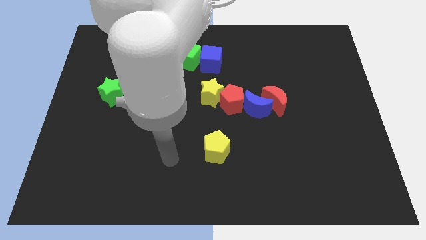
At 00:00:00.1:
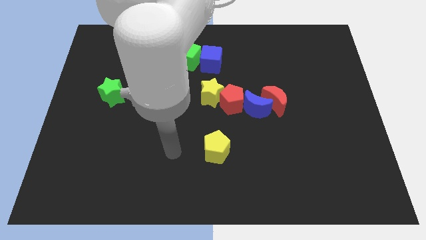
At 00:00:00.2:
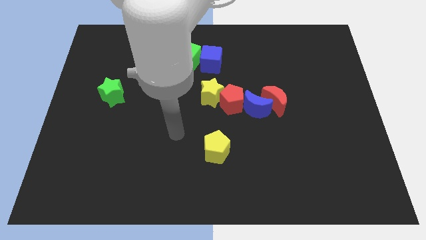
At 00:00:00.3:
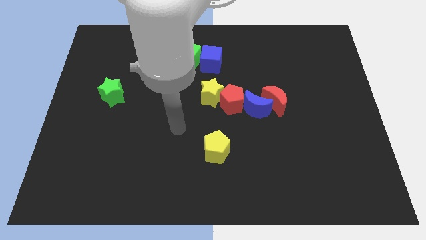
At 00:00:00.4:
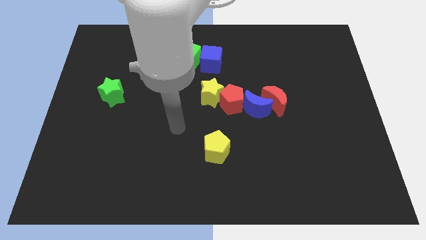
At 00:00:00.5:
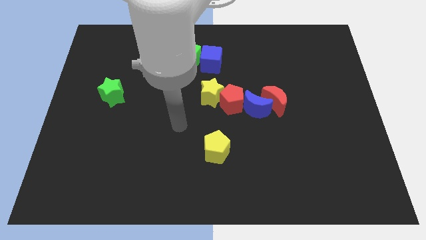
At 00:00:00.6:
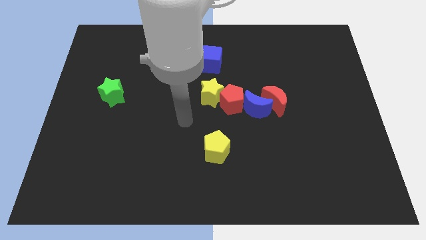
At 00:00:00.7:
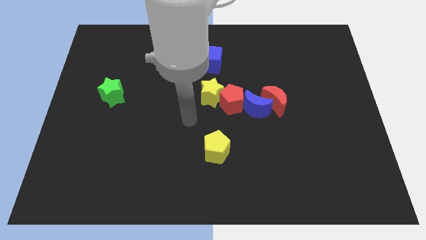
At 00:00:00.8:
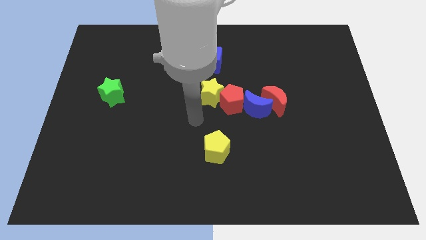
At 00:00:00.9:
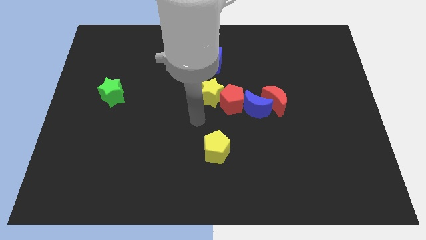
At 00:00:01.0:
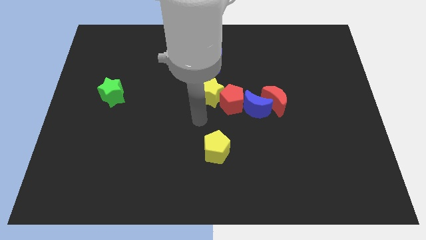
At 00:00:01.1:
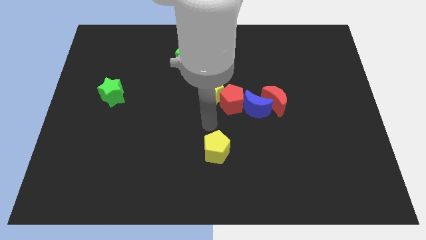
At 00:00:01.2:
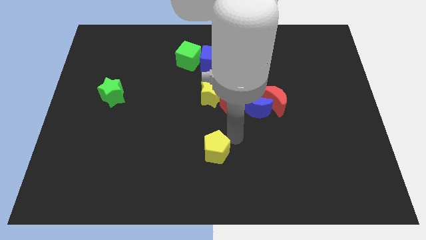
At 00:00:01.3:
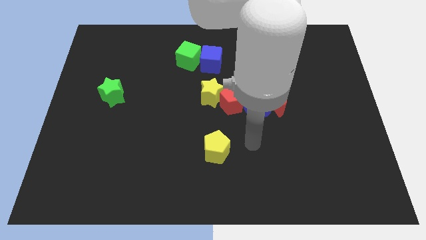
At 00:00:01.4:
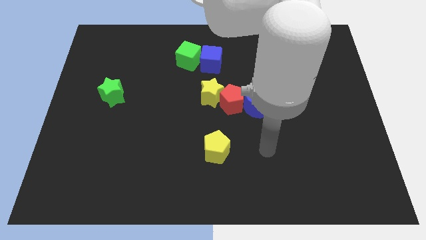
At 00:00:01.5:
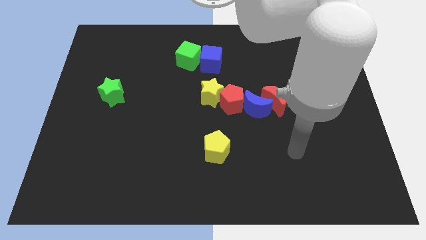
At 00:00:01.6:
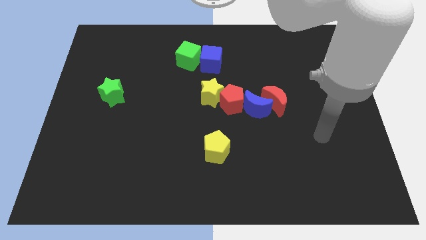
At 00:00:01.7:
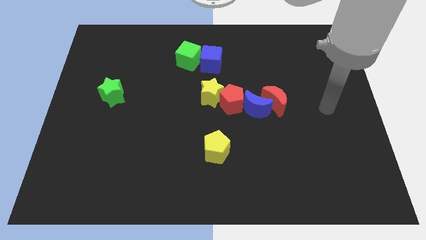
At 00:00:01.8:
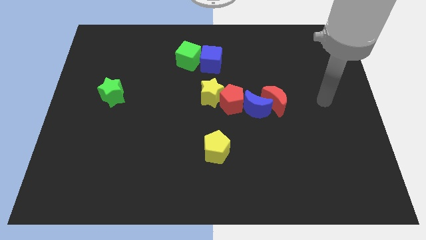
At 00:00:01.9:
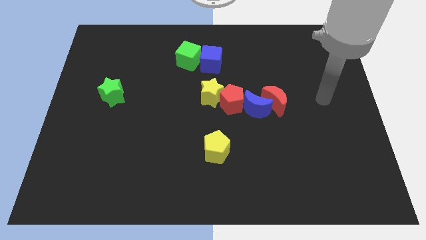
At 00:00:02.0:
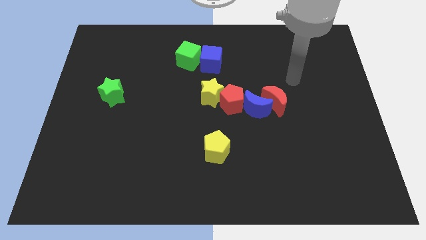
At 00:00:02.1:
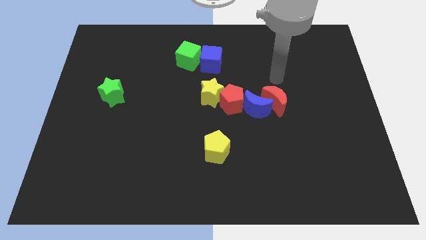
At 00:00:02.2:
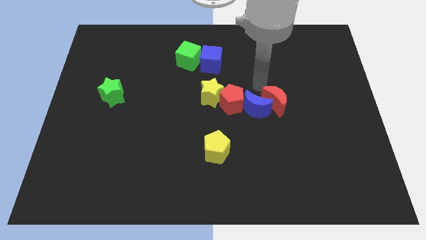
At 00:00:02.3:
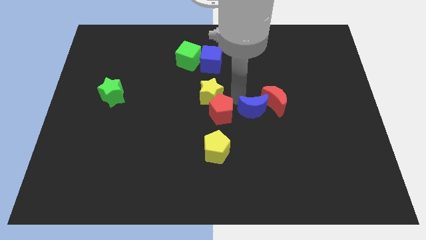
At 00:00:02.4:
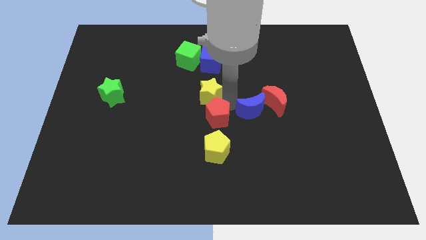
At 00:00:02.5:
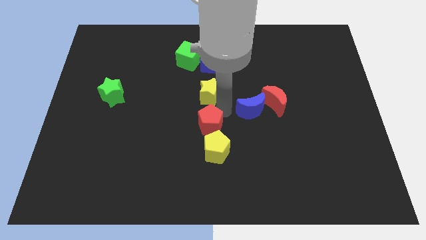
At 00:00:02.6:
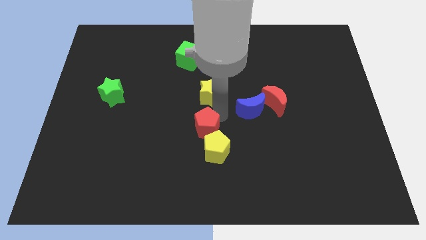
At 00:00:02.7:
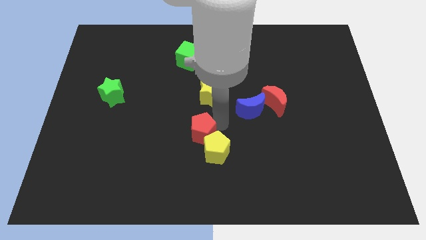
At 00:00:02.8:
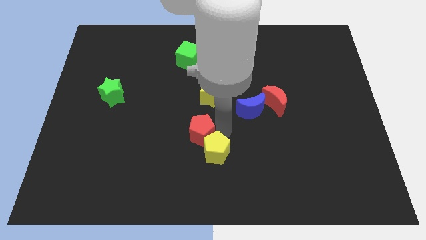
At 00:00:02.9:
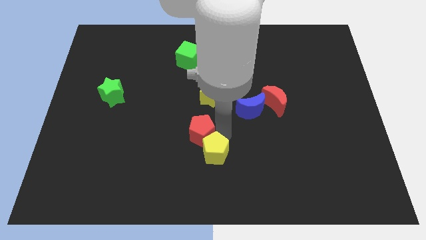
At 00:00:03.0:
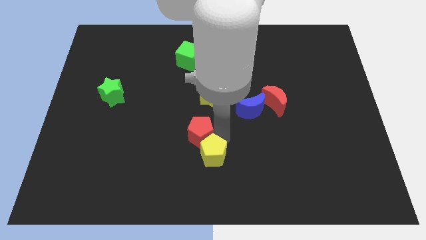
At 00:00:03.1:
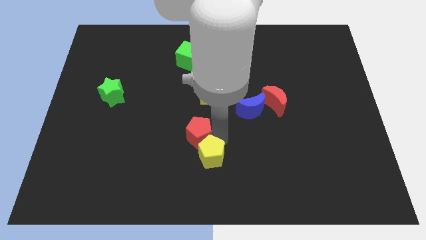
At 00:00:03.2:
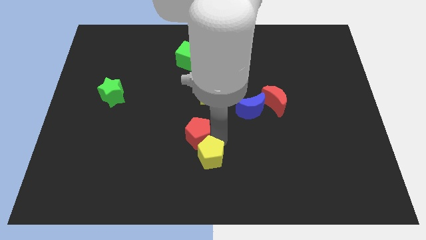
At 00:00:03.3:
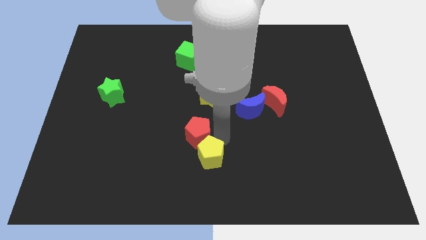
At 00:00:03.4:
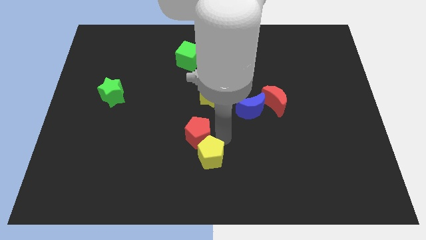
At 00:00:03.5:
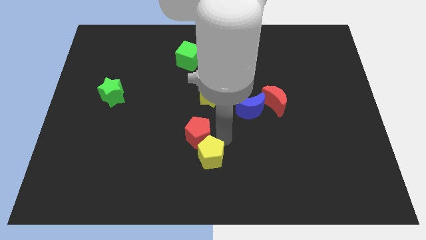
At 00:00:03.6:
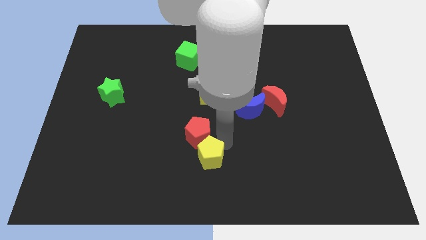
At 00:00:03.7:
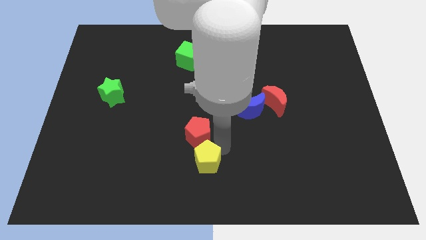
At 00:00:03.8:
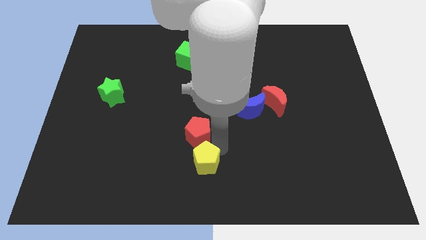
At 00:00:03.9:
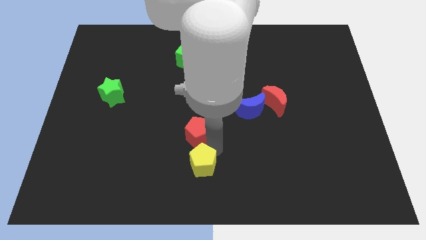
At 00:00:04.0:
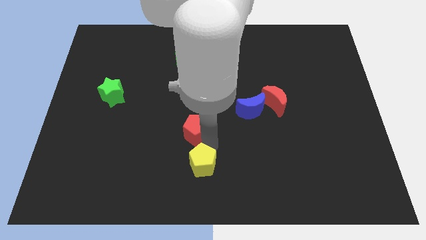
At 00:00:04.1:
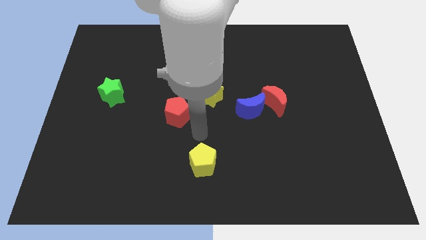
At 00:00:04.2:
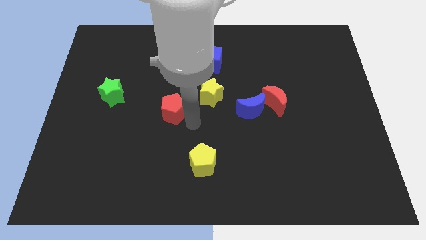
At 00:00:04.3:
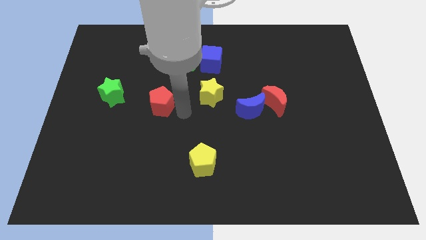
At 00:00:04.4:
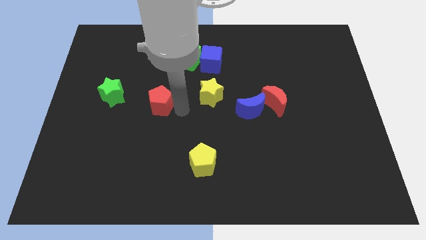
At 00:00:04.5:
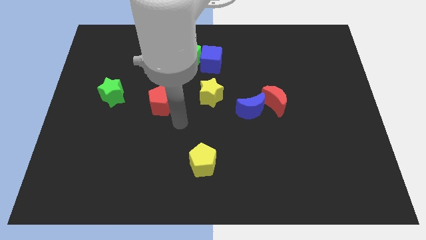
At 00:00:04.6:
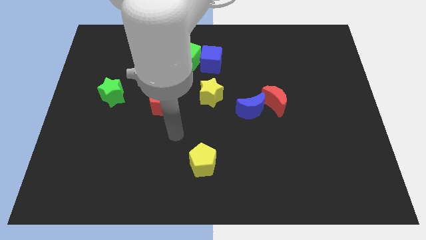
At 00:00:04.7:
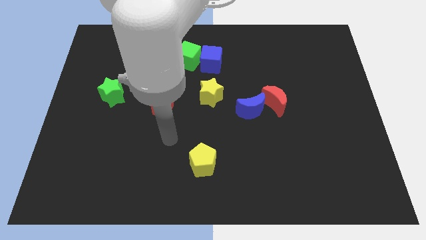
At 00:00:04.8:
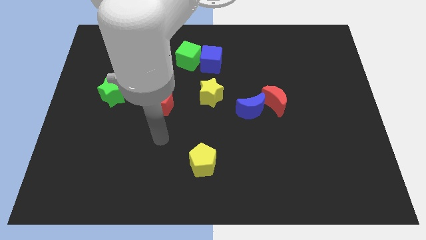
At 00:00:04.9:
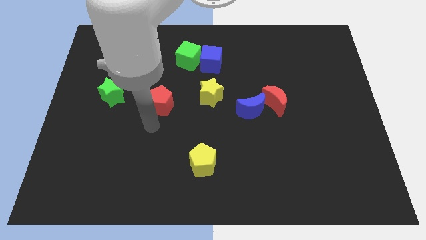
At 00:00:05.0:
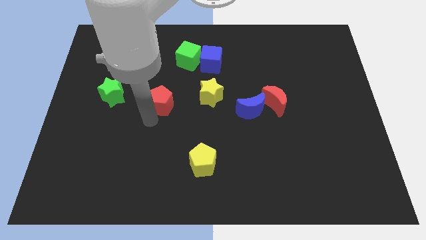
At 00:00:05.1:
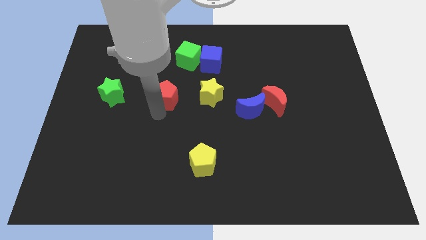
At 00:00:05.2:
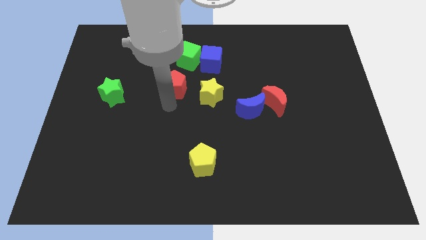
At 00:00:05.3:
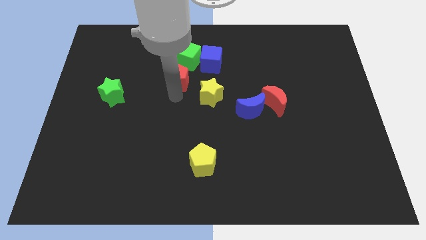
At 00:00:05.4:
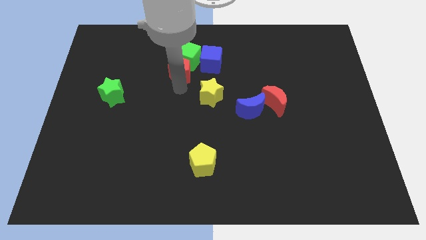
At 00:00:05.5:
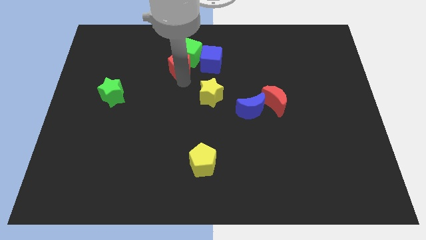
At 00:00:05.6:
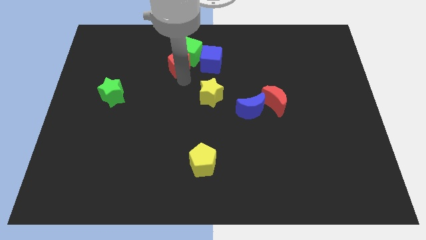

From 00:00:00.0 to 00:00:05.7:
move the red pentagon towards the green cube

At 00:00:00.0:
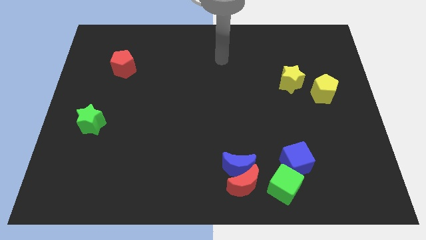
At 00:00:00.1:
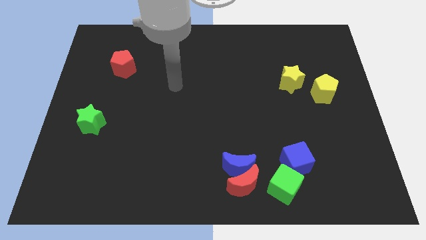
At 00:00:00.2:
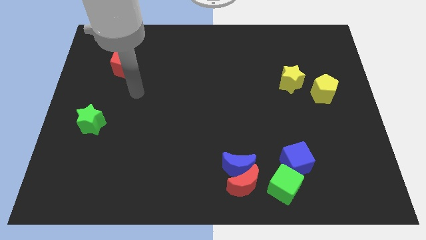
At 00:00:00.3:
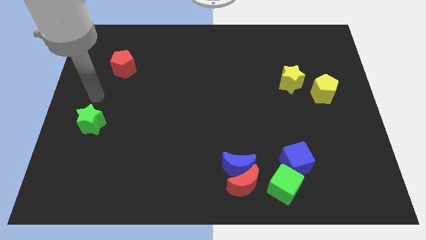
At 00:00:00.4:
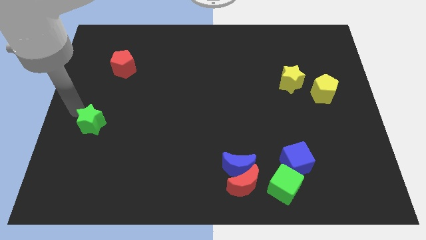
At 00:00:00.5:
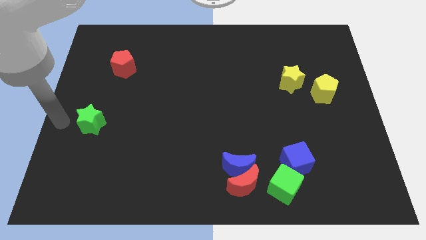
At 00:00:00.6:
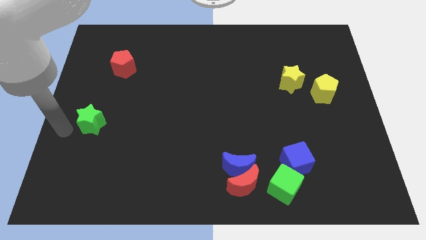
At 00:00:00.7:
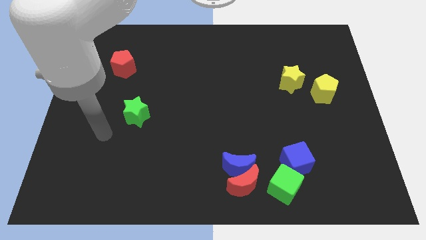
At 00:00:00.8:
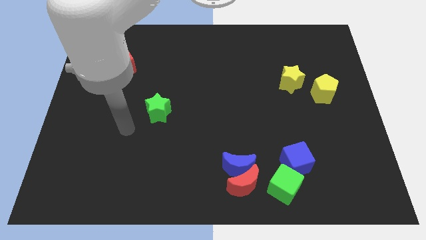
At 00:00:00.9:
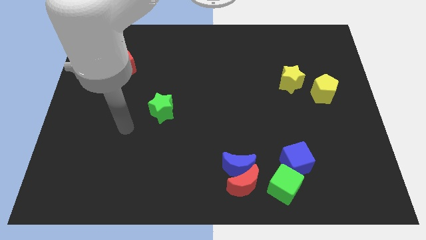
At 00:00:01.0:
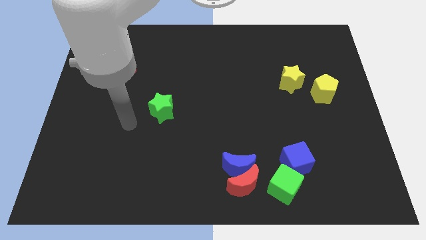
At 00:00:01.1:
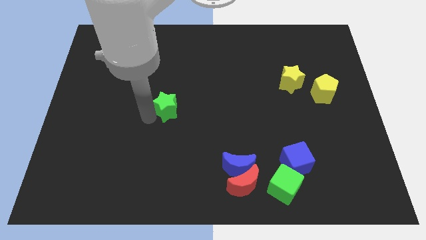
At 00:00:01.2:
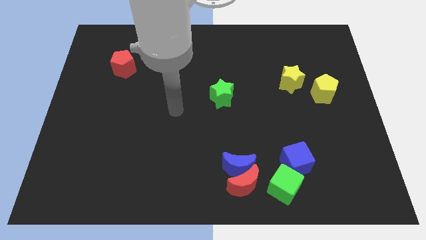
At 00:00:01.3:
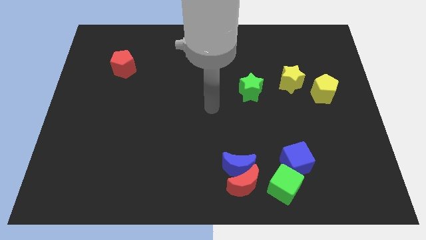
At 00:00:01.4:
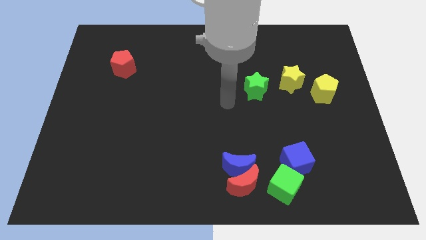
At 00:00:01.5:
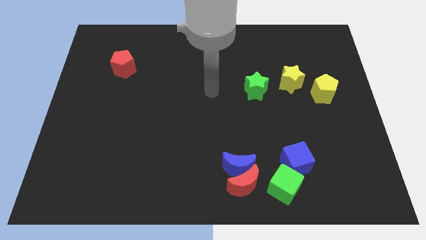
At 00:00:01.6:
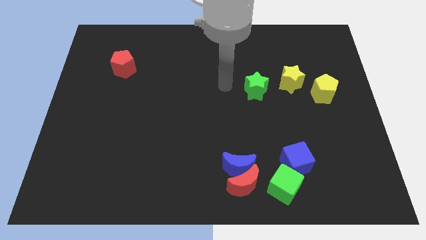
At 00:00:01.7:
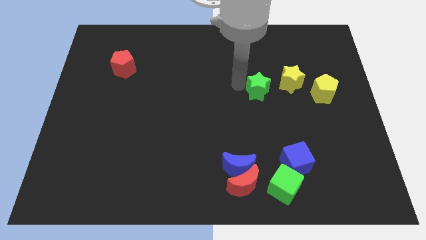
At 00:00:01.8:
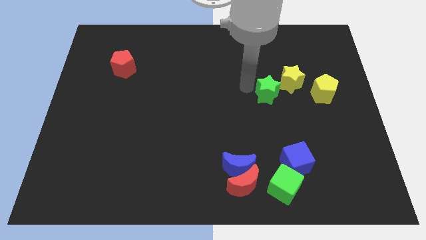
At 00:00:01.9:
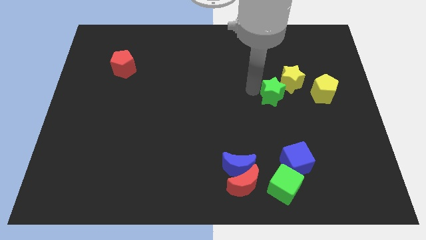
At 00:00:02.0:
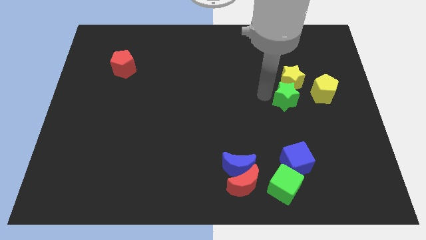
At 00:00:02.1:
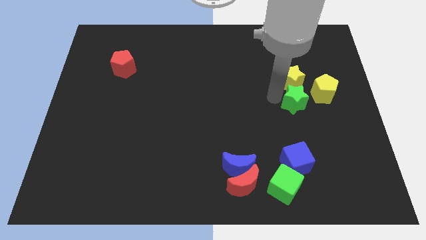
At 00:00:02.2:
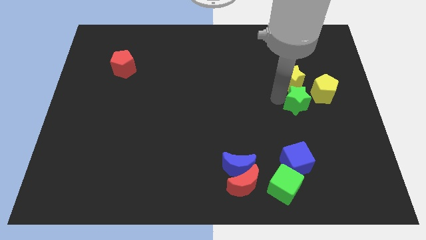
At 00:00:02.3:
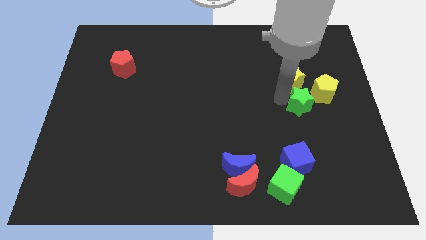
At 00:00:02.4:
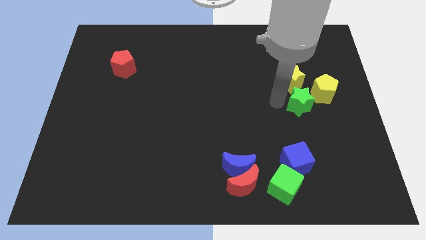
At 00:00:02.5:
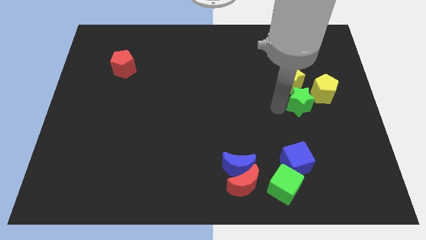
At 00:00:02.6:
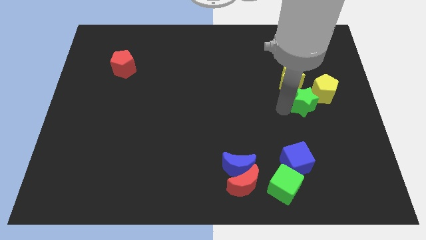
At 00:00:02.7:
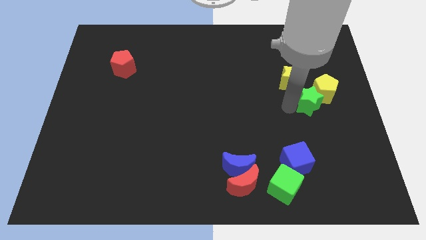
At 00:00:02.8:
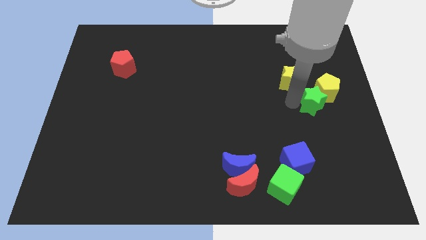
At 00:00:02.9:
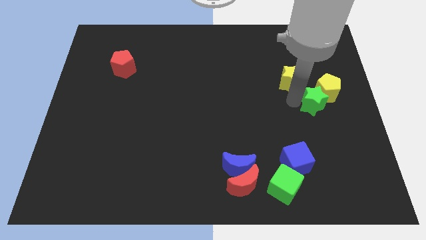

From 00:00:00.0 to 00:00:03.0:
move the green star to the yellow pentagon
